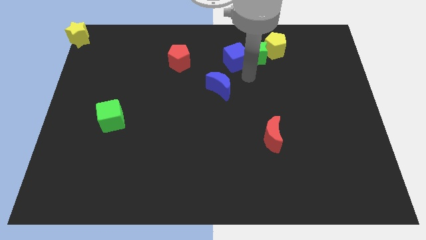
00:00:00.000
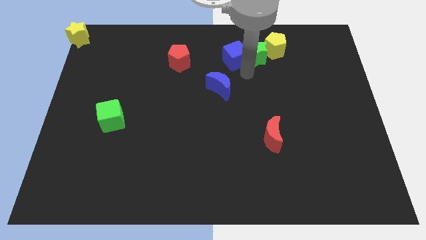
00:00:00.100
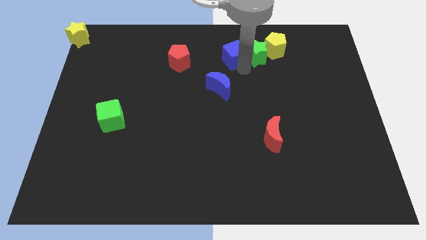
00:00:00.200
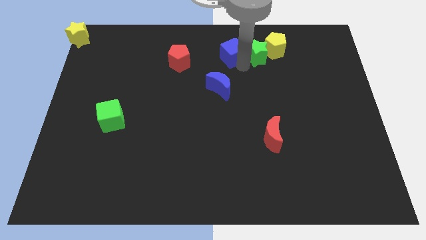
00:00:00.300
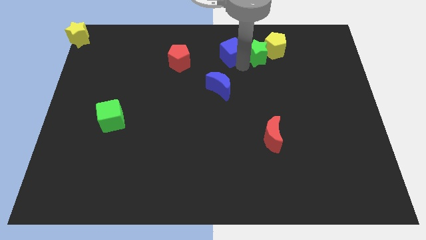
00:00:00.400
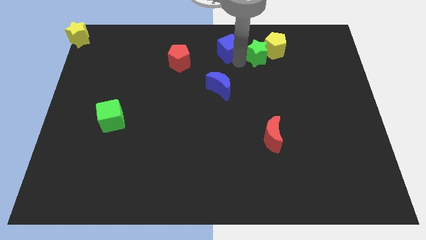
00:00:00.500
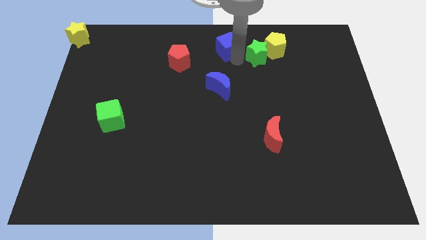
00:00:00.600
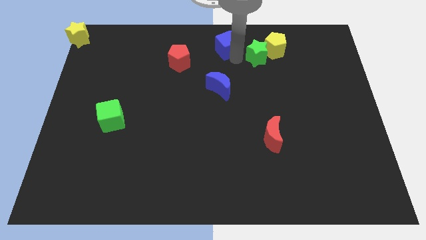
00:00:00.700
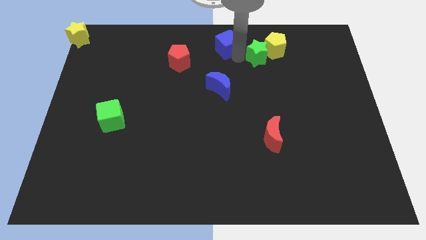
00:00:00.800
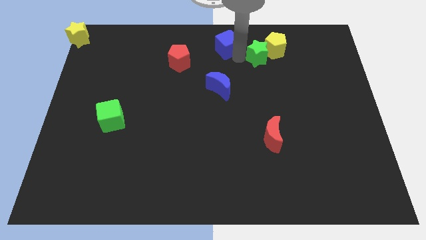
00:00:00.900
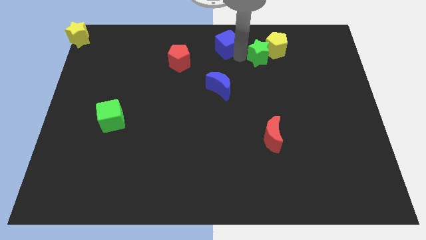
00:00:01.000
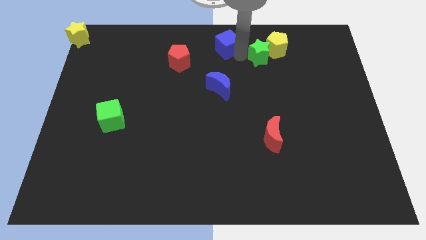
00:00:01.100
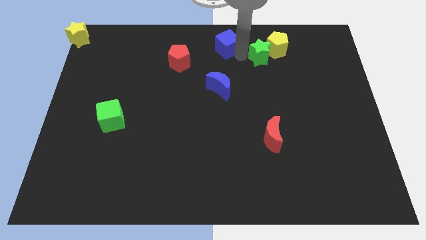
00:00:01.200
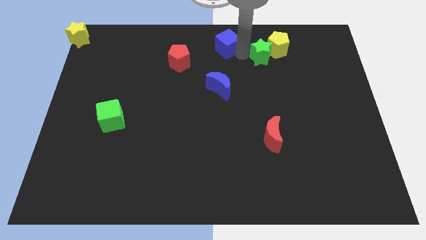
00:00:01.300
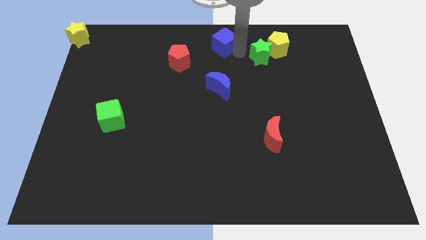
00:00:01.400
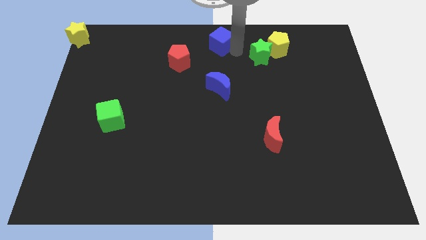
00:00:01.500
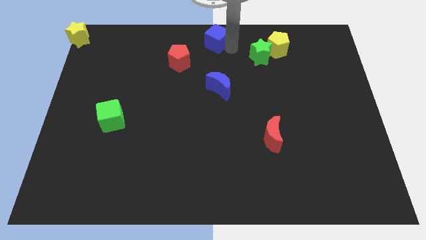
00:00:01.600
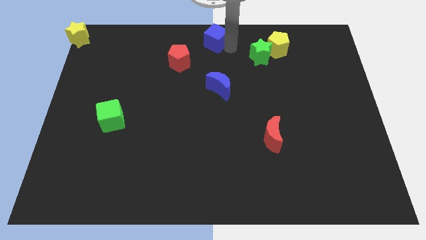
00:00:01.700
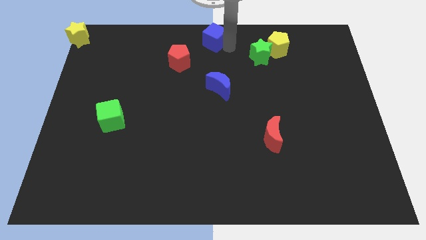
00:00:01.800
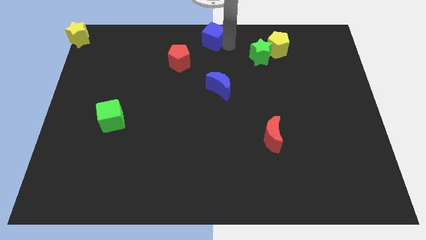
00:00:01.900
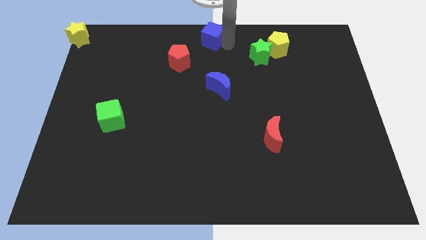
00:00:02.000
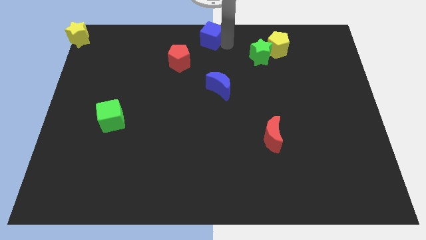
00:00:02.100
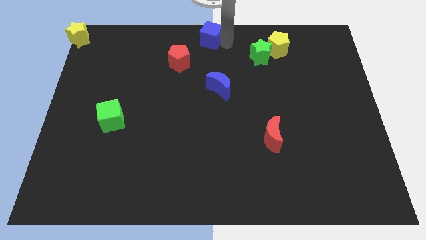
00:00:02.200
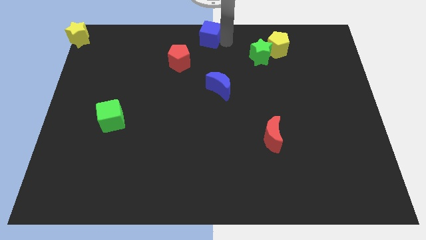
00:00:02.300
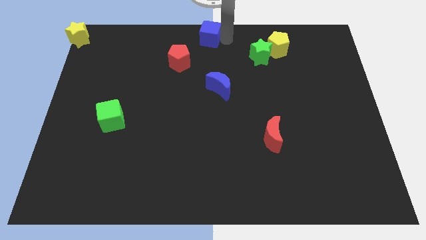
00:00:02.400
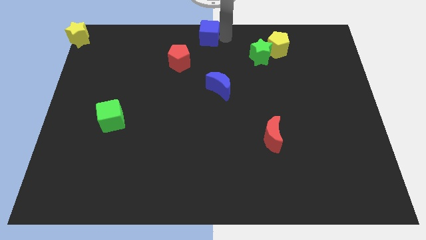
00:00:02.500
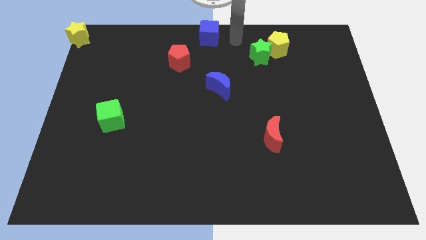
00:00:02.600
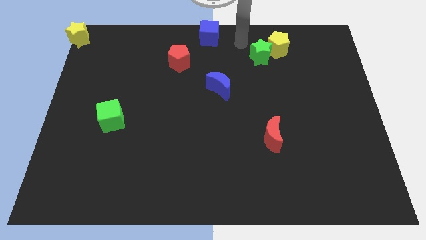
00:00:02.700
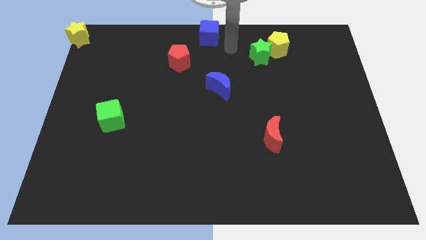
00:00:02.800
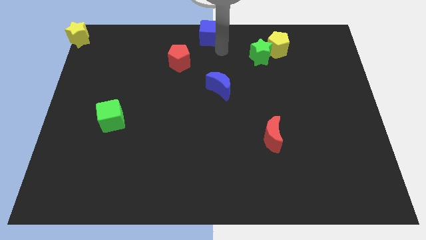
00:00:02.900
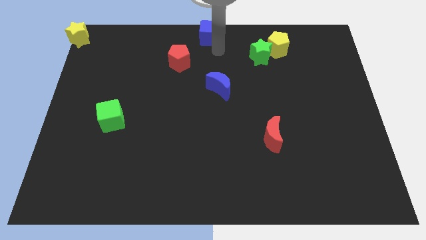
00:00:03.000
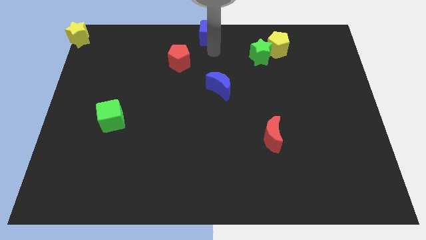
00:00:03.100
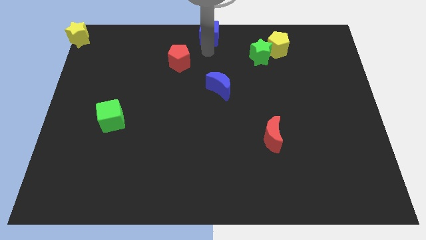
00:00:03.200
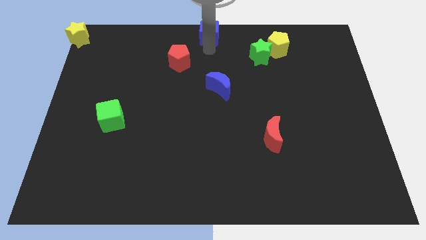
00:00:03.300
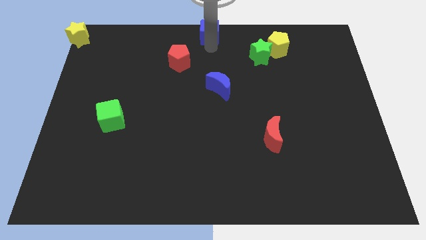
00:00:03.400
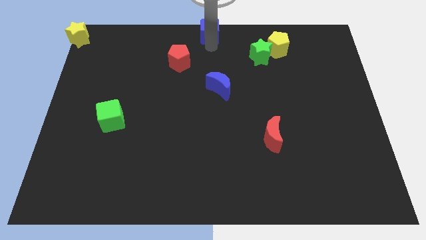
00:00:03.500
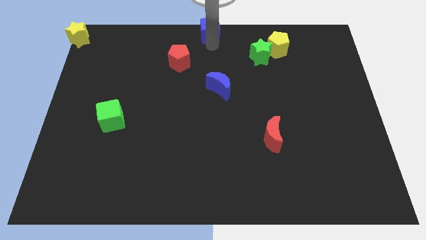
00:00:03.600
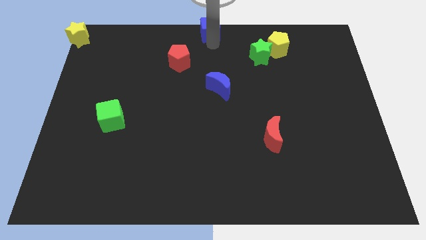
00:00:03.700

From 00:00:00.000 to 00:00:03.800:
move the blue cube to the top center

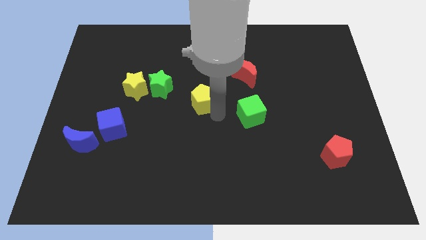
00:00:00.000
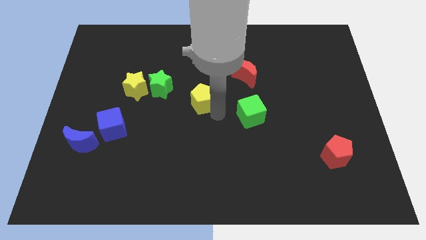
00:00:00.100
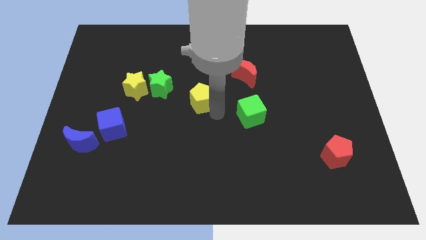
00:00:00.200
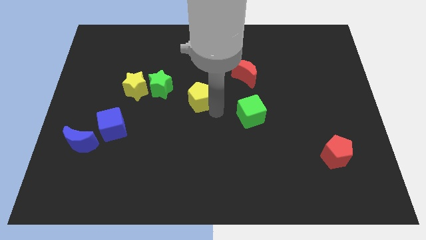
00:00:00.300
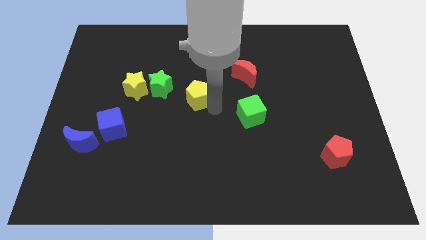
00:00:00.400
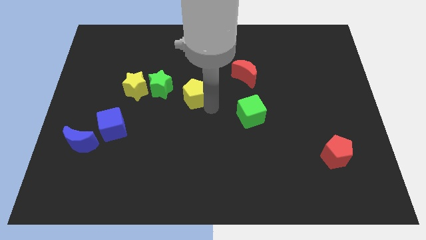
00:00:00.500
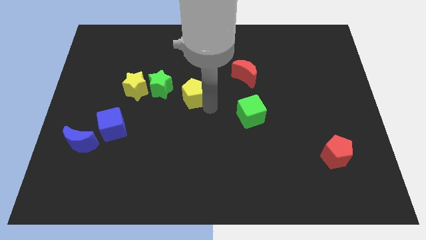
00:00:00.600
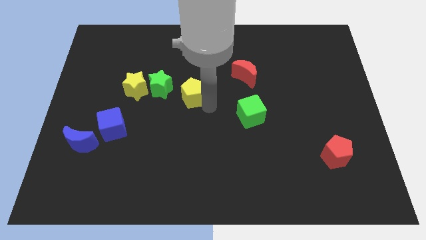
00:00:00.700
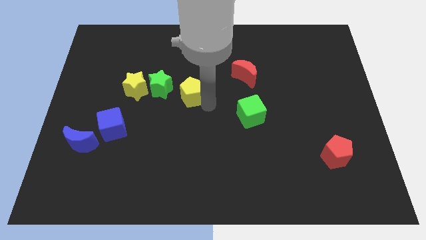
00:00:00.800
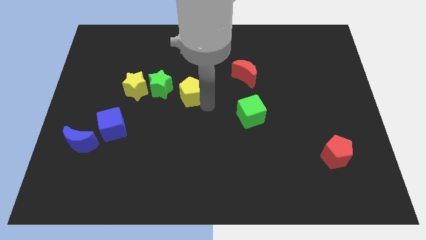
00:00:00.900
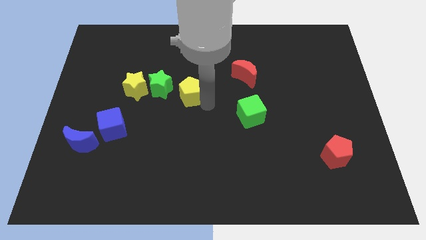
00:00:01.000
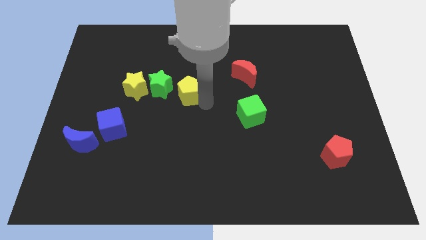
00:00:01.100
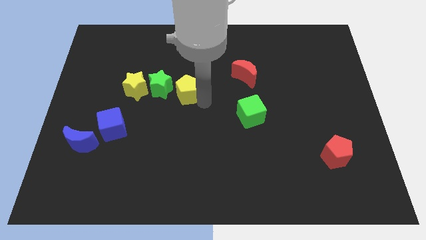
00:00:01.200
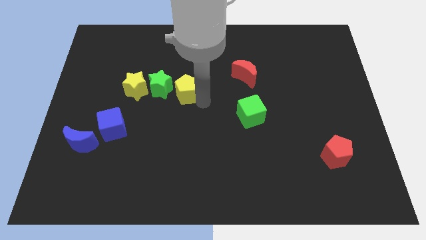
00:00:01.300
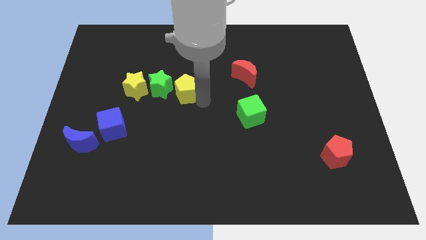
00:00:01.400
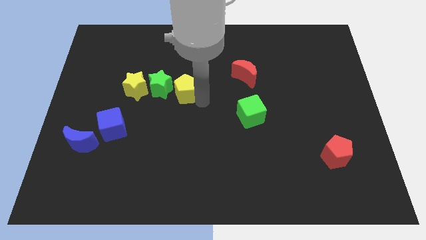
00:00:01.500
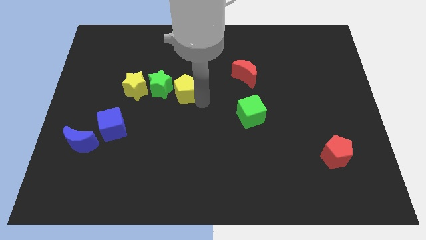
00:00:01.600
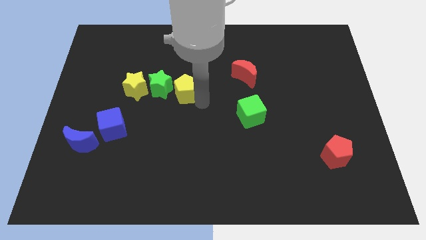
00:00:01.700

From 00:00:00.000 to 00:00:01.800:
move the yellow pentagon towards the right side of the green star

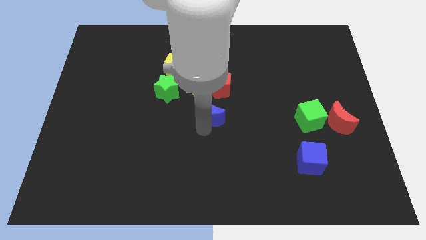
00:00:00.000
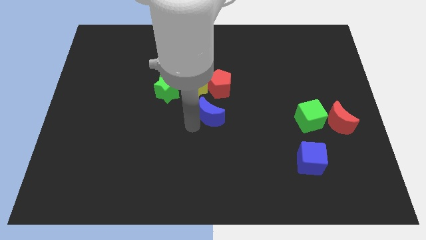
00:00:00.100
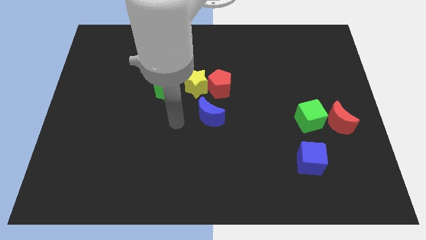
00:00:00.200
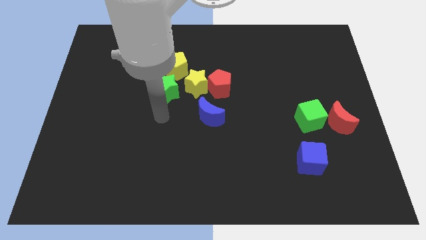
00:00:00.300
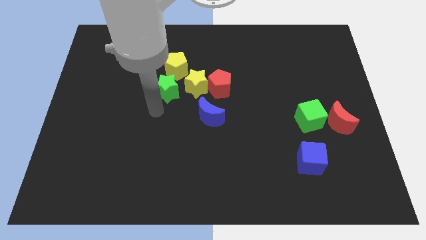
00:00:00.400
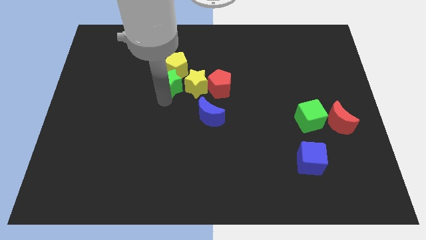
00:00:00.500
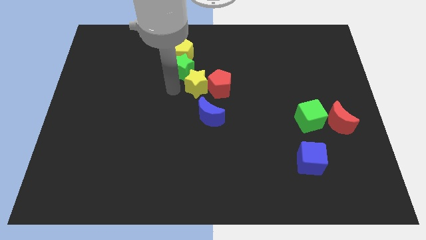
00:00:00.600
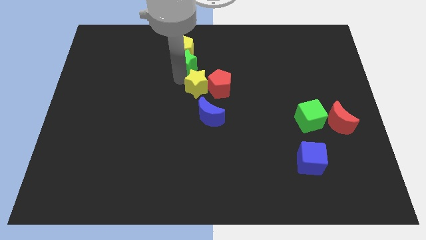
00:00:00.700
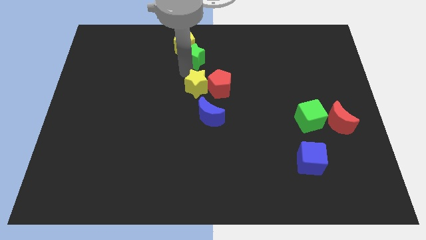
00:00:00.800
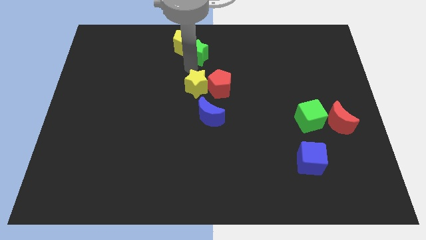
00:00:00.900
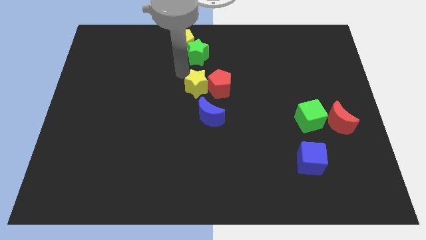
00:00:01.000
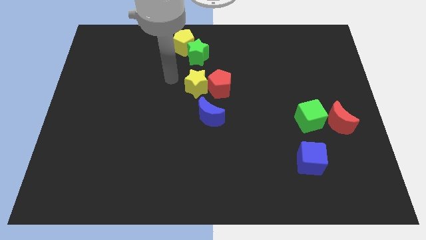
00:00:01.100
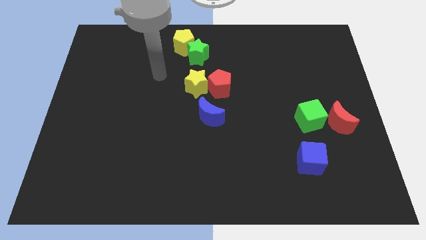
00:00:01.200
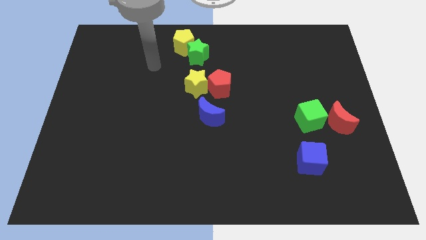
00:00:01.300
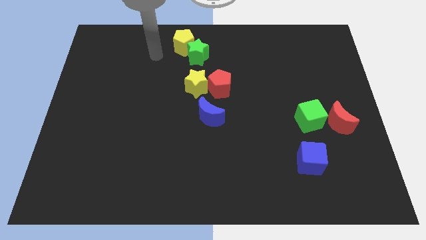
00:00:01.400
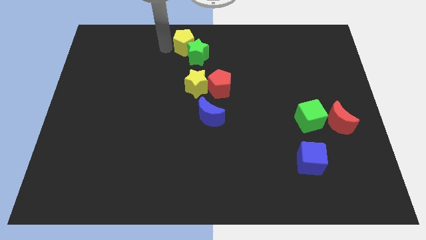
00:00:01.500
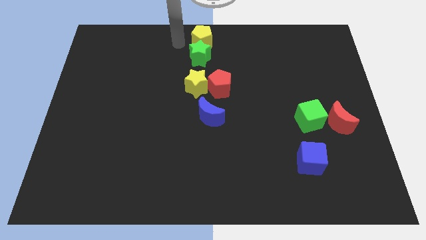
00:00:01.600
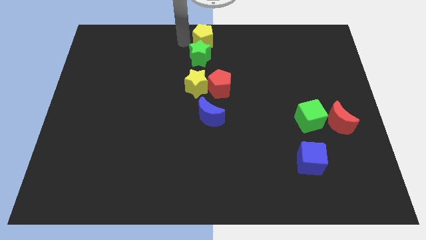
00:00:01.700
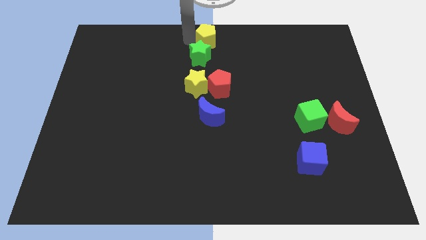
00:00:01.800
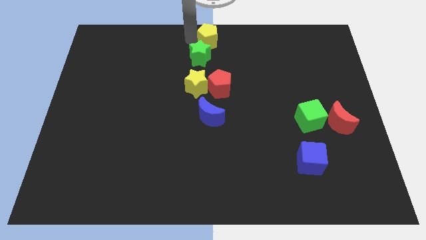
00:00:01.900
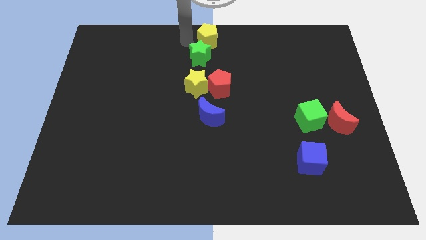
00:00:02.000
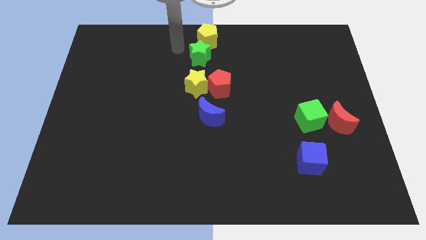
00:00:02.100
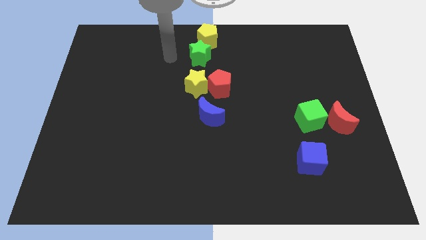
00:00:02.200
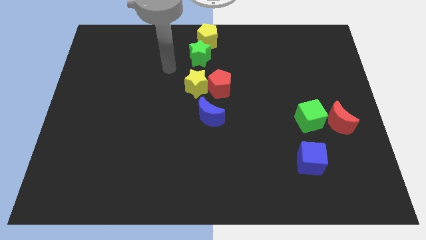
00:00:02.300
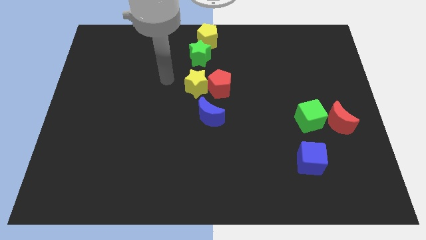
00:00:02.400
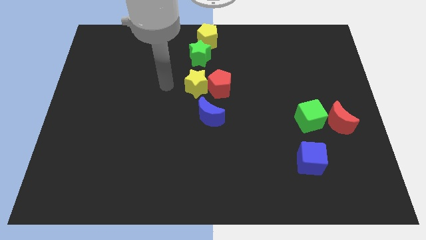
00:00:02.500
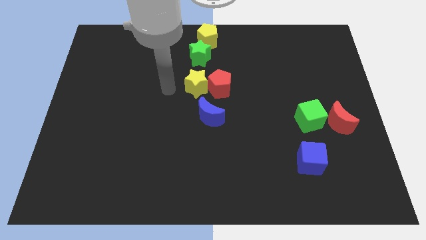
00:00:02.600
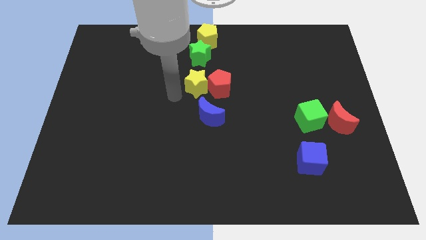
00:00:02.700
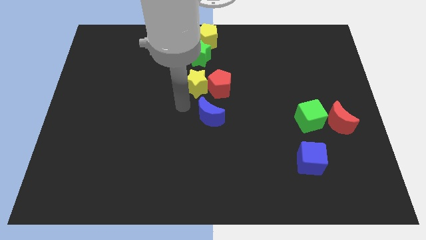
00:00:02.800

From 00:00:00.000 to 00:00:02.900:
move the green star and yellow pentagon in a vertical line above the yellow star

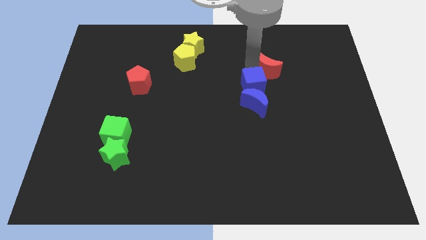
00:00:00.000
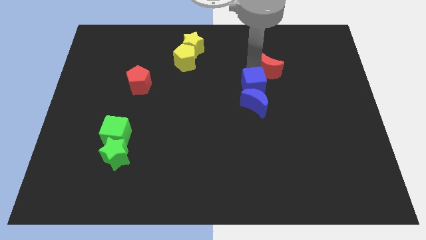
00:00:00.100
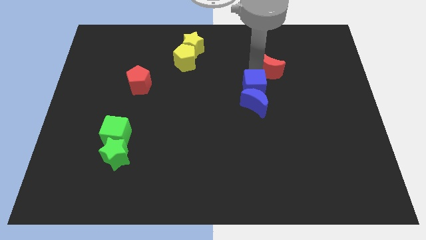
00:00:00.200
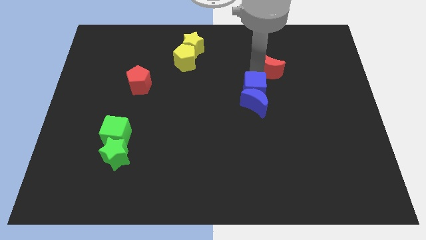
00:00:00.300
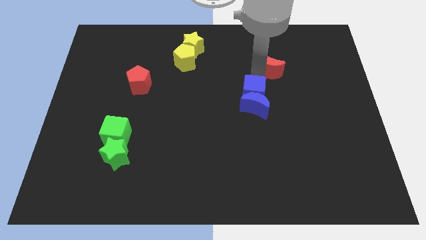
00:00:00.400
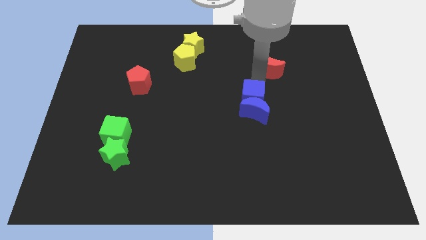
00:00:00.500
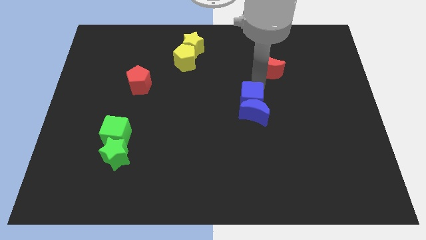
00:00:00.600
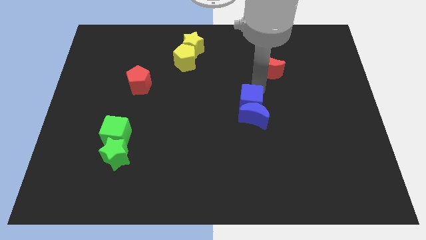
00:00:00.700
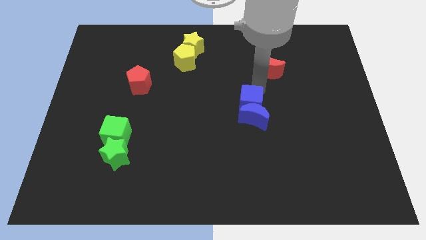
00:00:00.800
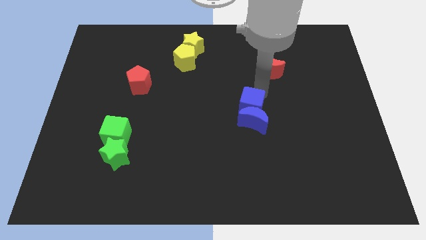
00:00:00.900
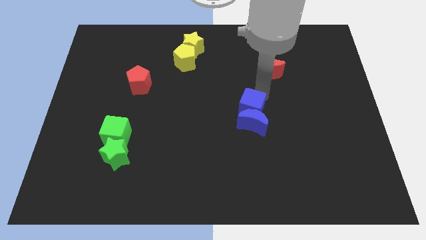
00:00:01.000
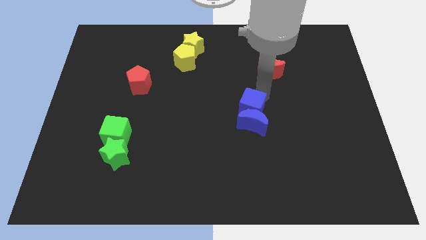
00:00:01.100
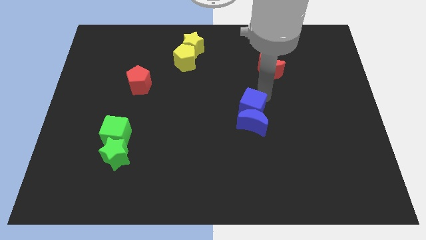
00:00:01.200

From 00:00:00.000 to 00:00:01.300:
push the group of blue blocks away from the red moon
